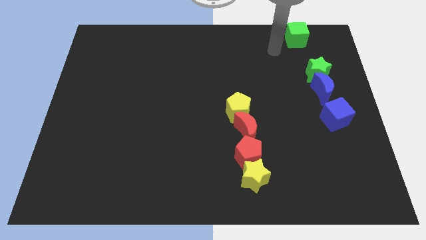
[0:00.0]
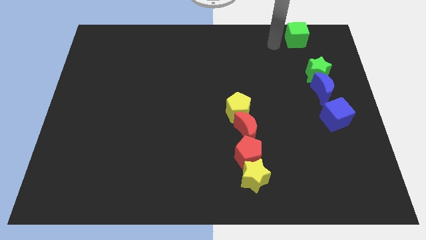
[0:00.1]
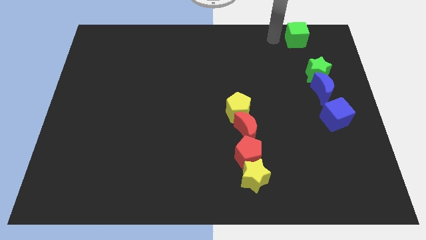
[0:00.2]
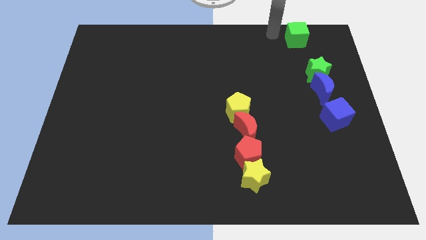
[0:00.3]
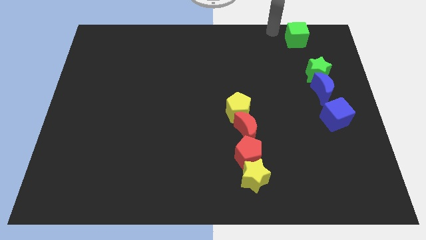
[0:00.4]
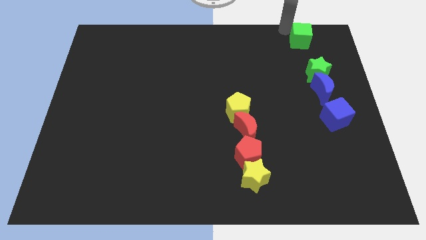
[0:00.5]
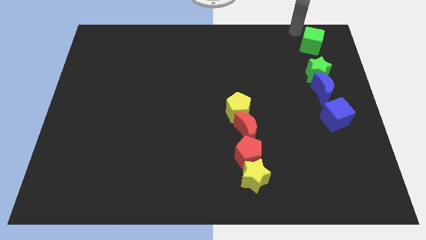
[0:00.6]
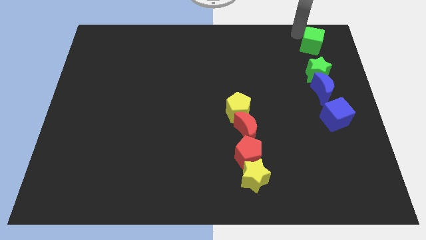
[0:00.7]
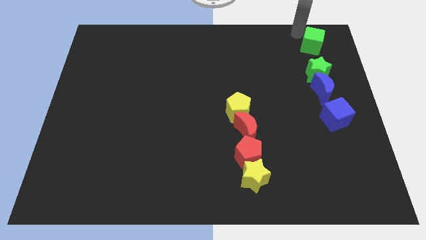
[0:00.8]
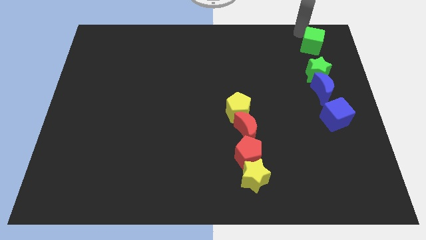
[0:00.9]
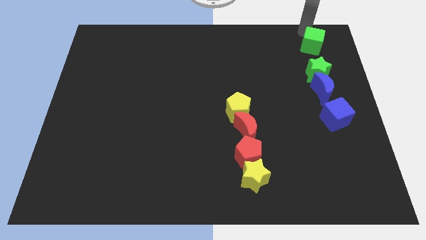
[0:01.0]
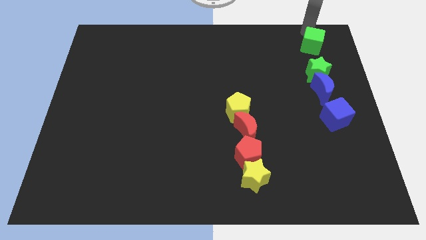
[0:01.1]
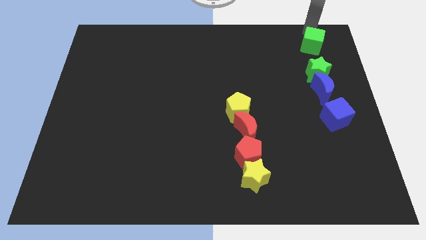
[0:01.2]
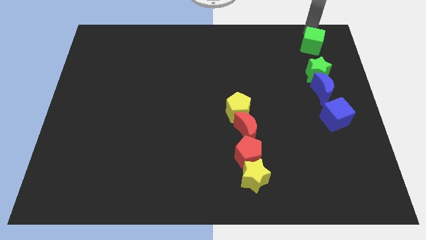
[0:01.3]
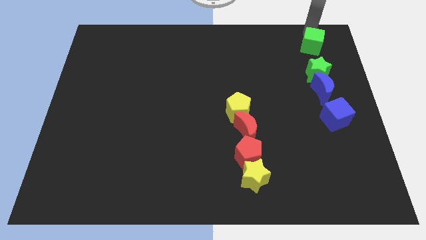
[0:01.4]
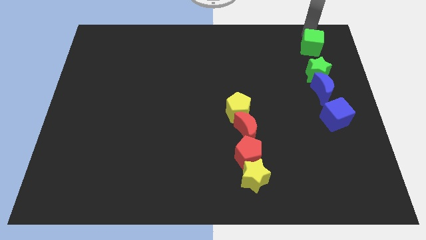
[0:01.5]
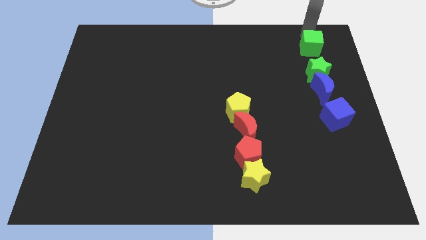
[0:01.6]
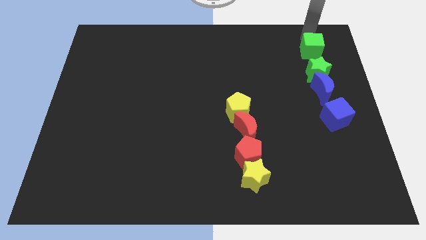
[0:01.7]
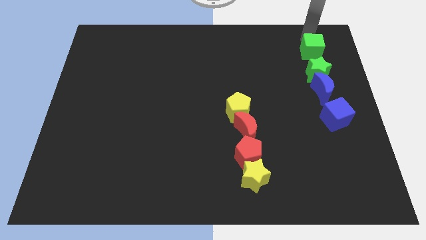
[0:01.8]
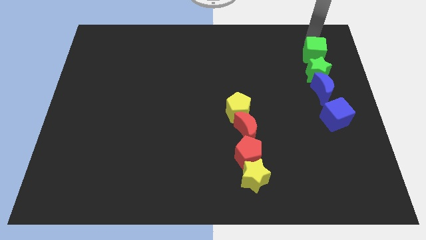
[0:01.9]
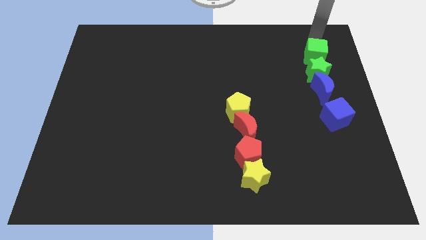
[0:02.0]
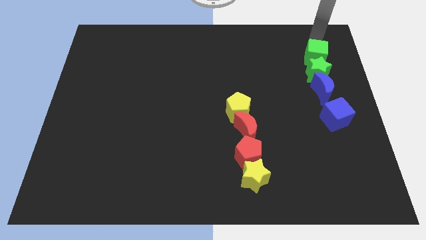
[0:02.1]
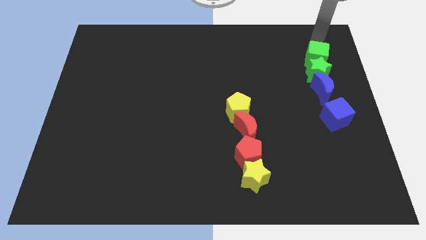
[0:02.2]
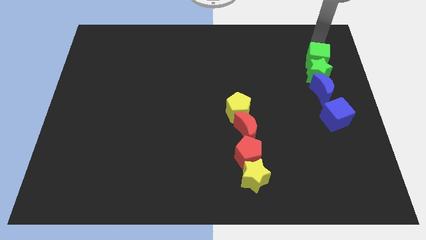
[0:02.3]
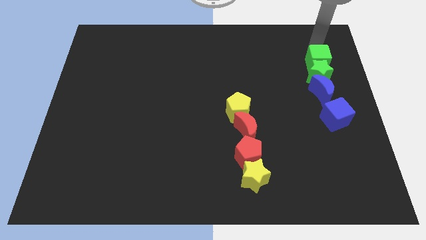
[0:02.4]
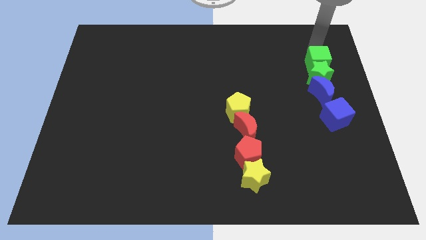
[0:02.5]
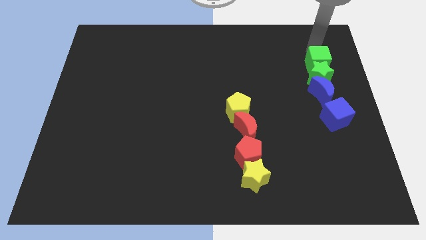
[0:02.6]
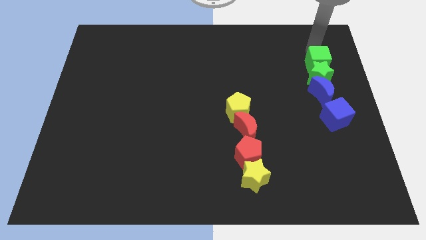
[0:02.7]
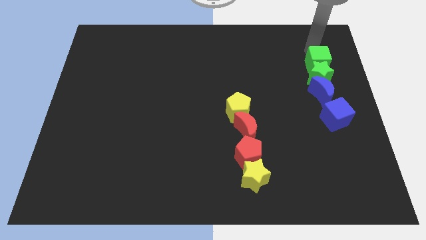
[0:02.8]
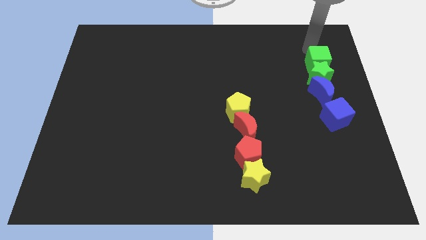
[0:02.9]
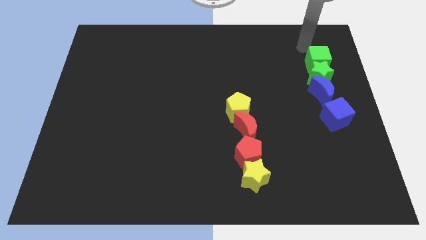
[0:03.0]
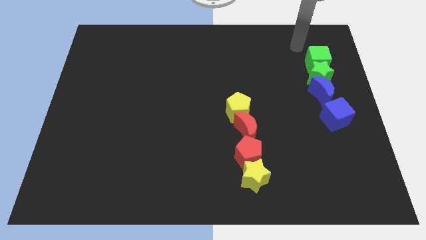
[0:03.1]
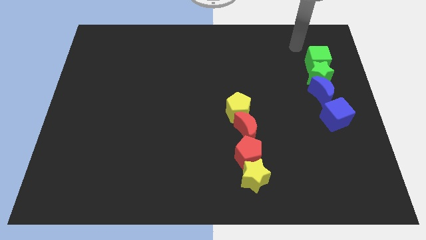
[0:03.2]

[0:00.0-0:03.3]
push the green cube into green star

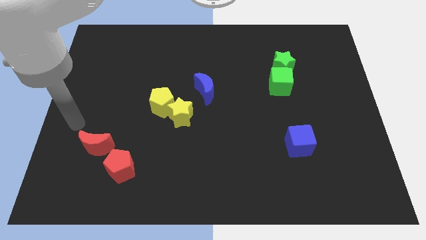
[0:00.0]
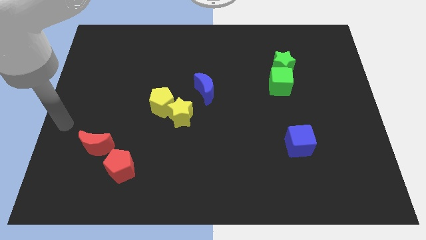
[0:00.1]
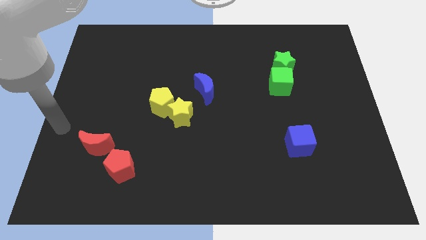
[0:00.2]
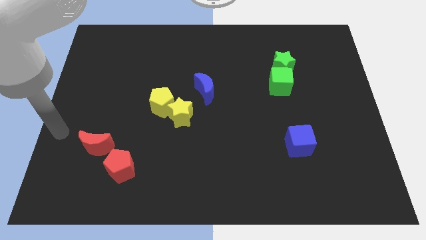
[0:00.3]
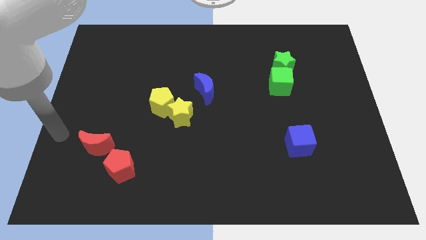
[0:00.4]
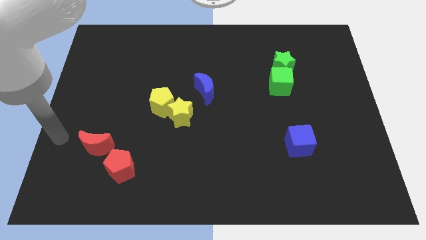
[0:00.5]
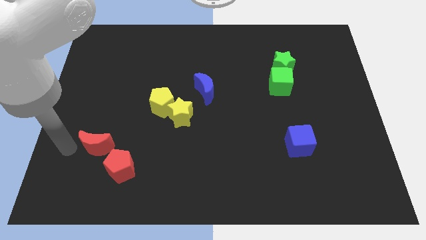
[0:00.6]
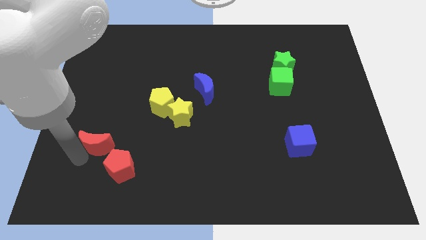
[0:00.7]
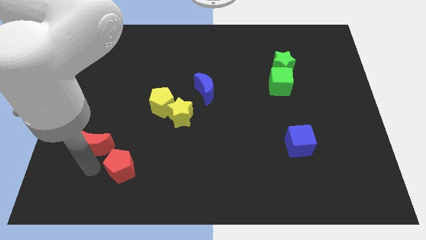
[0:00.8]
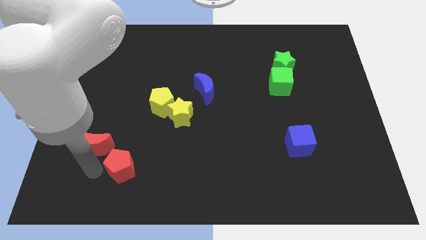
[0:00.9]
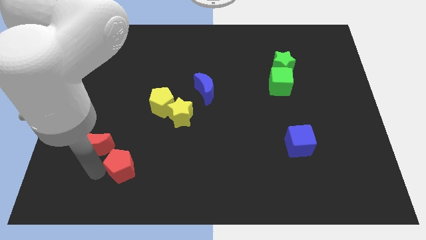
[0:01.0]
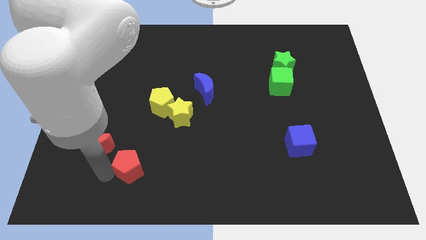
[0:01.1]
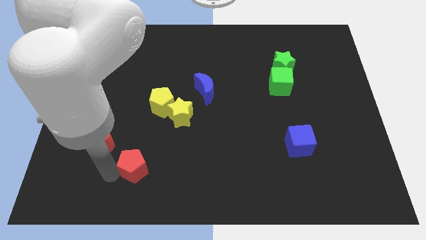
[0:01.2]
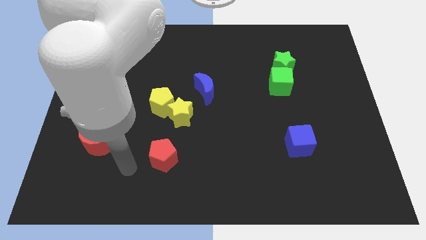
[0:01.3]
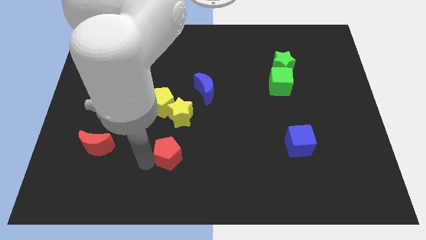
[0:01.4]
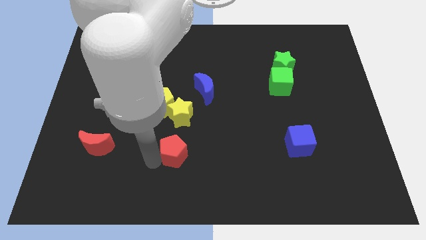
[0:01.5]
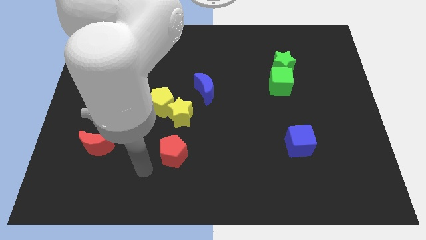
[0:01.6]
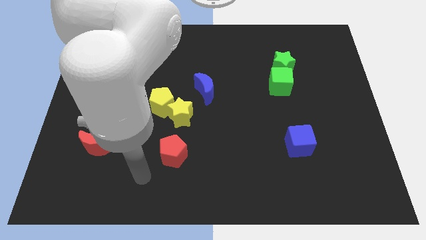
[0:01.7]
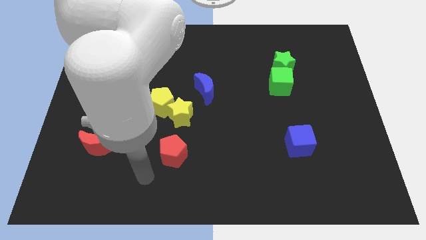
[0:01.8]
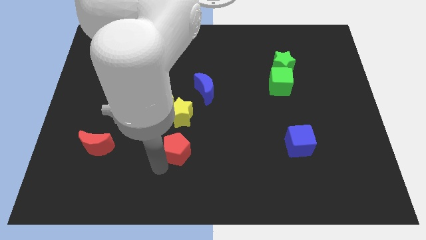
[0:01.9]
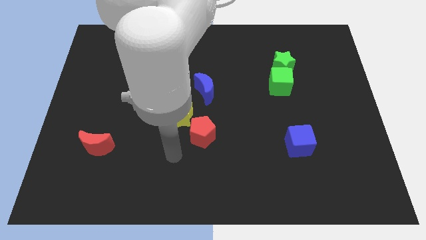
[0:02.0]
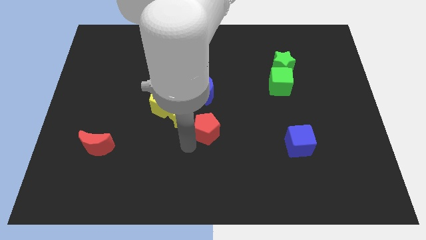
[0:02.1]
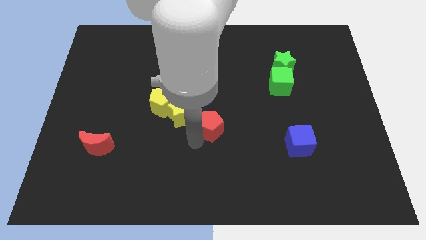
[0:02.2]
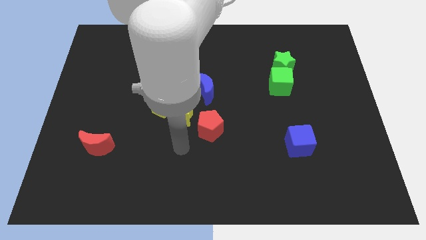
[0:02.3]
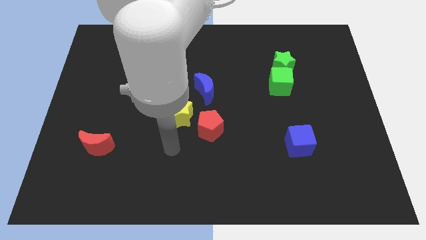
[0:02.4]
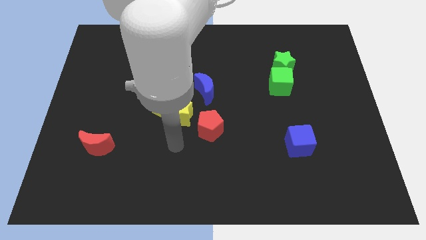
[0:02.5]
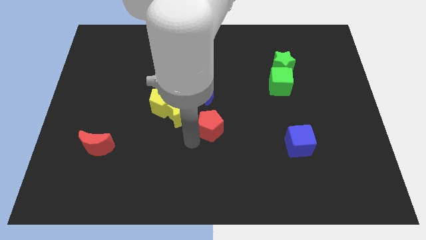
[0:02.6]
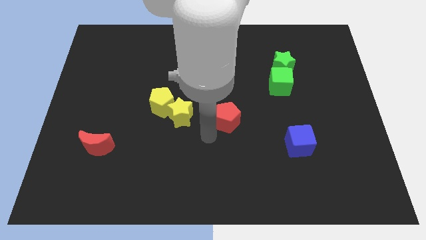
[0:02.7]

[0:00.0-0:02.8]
place the red pentagon below the blue crescent

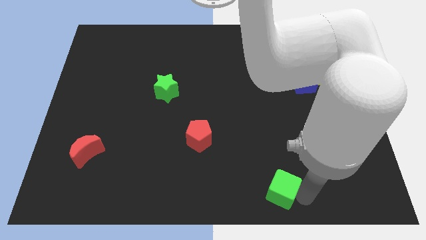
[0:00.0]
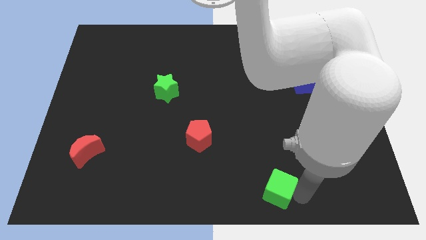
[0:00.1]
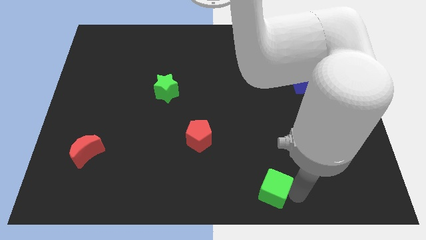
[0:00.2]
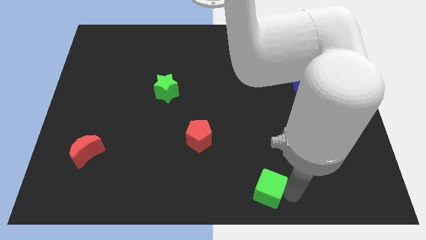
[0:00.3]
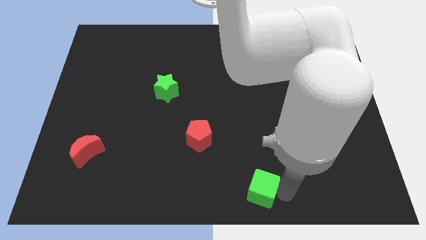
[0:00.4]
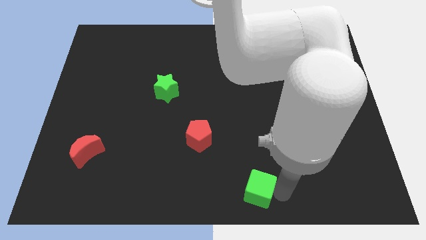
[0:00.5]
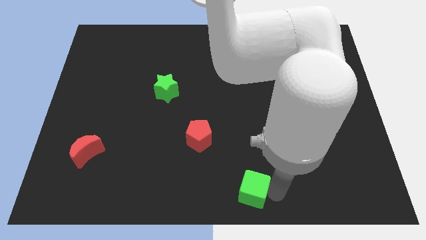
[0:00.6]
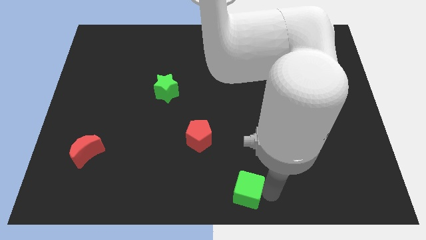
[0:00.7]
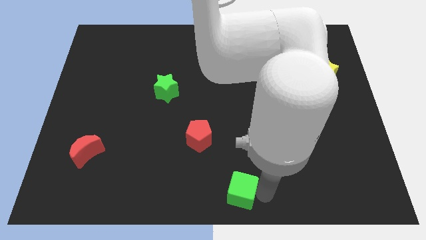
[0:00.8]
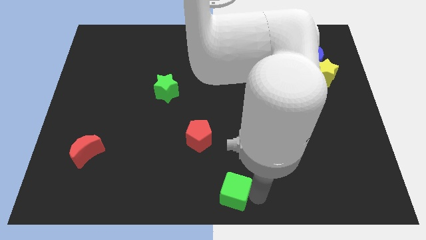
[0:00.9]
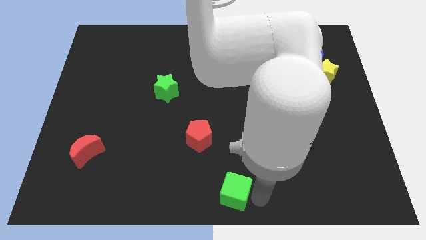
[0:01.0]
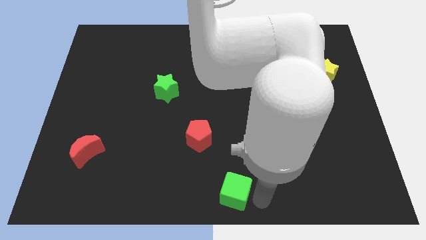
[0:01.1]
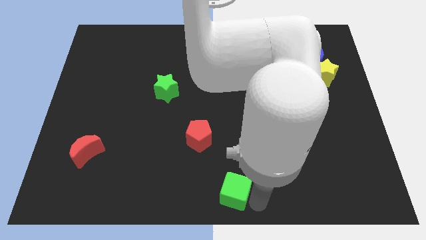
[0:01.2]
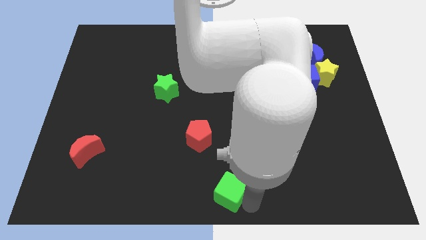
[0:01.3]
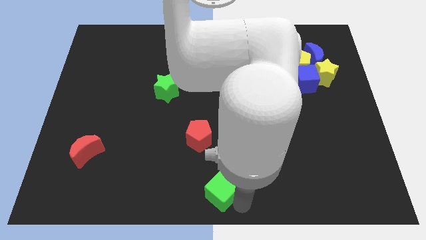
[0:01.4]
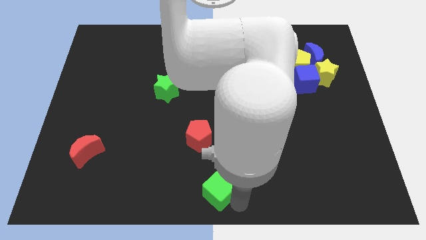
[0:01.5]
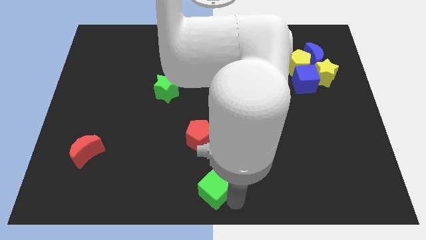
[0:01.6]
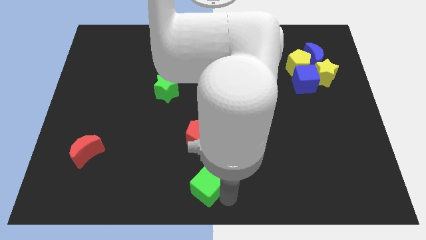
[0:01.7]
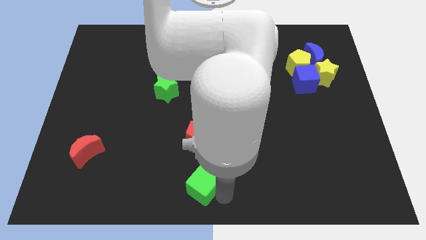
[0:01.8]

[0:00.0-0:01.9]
push the green cube below the red pentagon

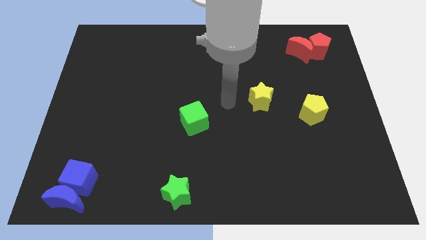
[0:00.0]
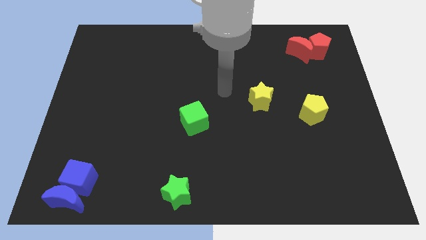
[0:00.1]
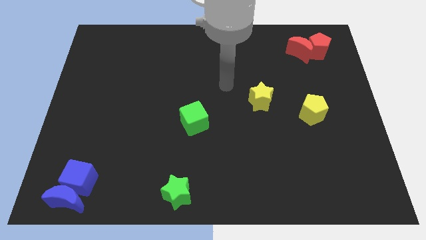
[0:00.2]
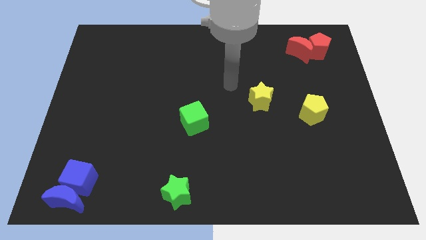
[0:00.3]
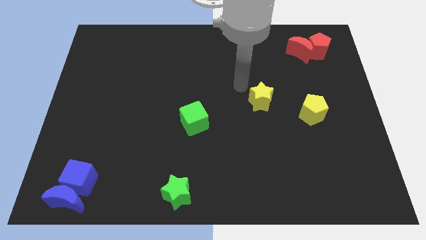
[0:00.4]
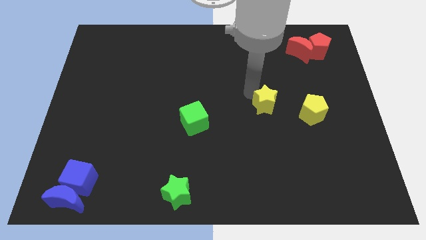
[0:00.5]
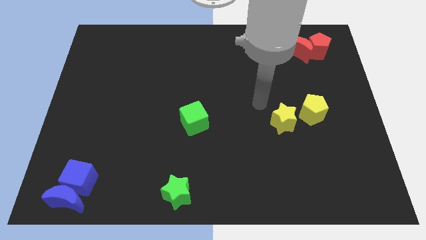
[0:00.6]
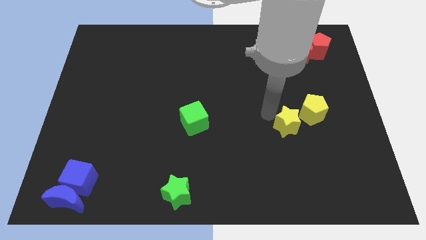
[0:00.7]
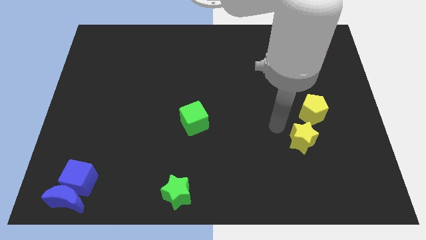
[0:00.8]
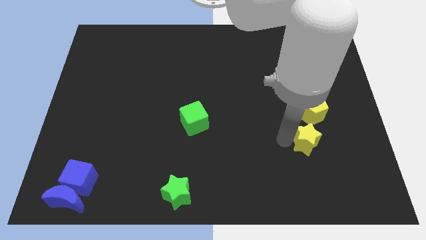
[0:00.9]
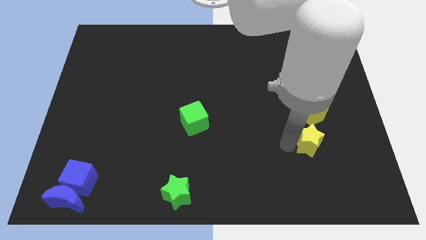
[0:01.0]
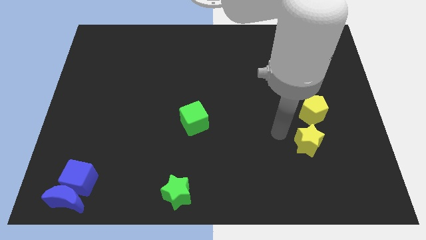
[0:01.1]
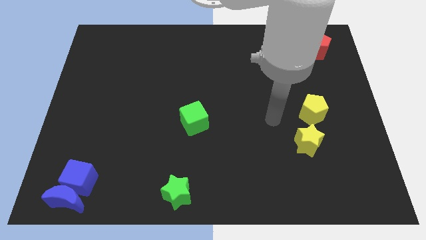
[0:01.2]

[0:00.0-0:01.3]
place the yellow star below the yellow pentagon
